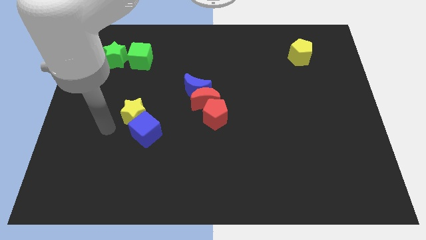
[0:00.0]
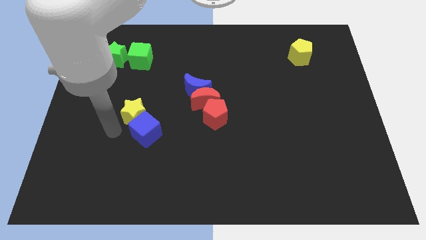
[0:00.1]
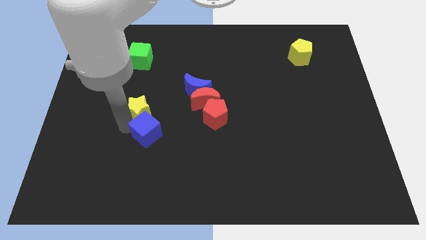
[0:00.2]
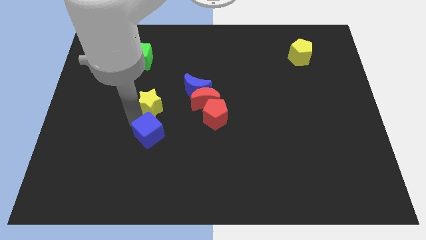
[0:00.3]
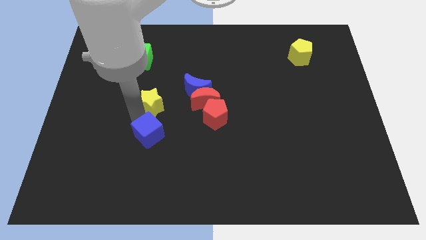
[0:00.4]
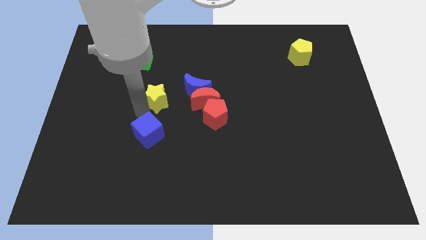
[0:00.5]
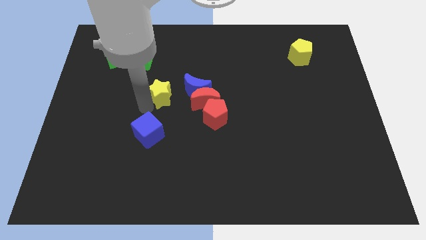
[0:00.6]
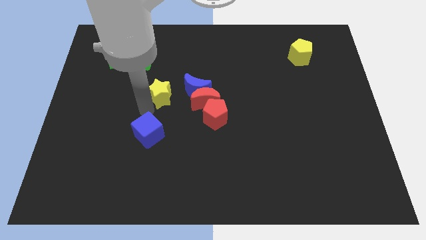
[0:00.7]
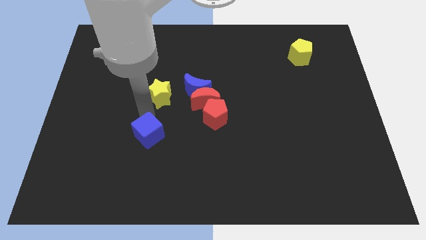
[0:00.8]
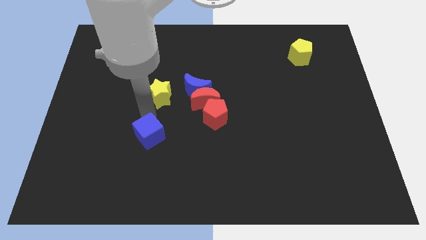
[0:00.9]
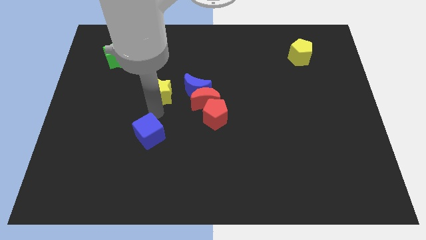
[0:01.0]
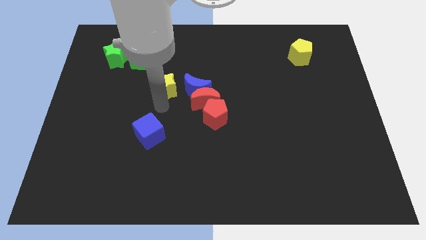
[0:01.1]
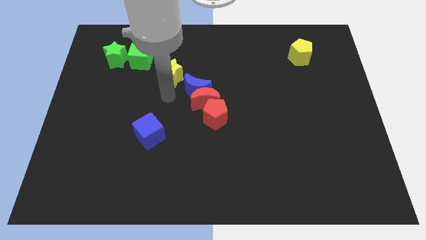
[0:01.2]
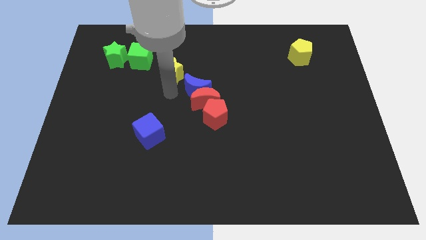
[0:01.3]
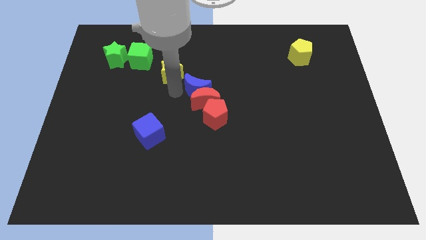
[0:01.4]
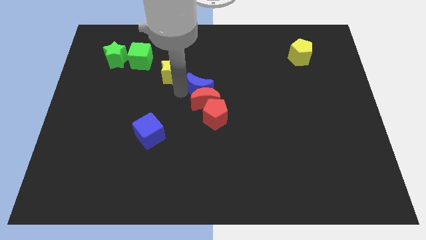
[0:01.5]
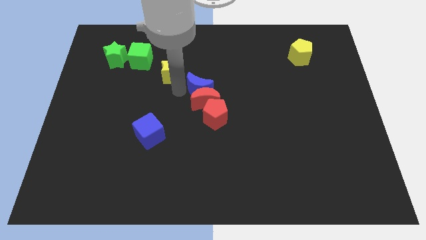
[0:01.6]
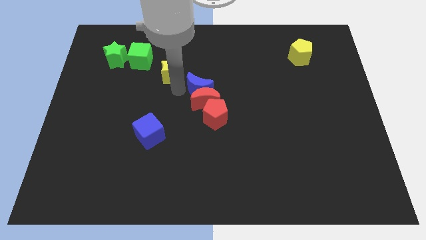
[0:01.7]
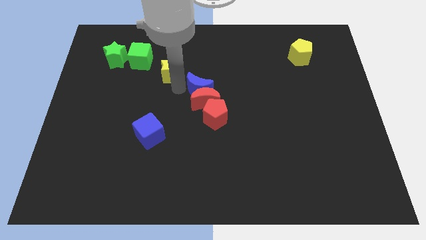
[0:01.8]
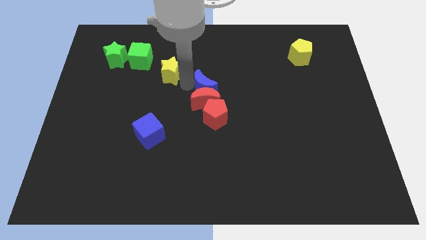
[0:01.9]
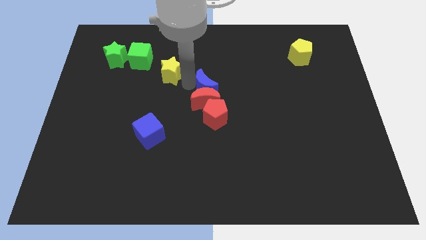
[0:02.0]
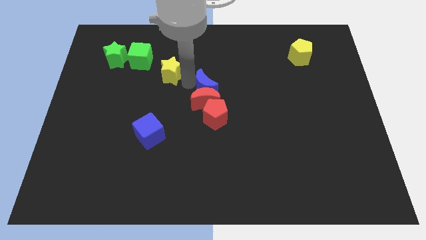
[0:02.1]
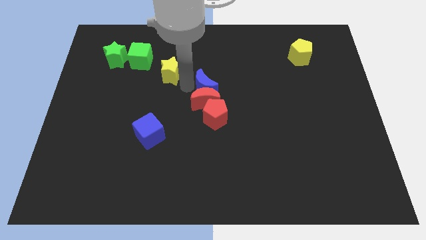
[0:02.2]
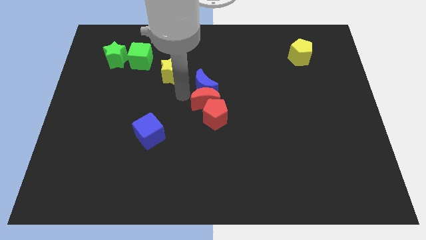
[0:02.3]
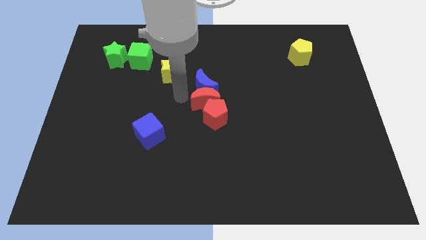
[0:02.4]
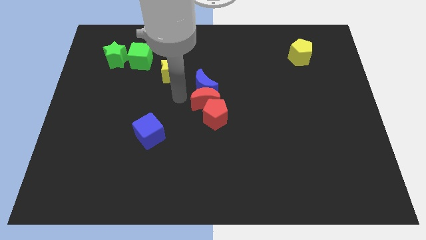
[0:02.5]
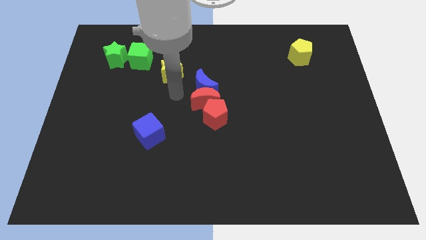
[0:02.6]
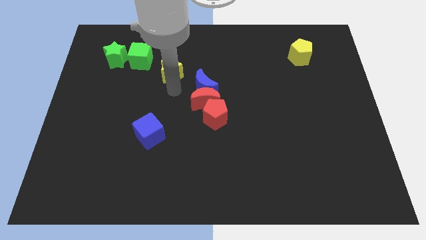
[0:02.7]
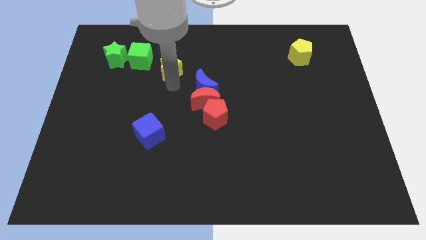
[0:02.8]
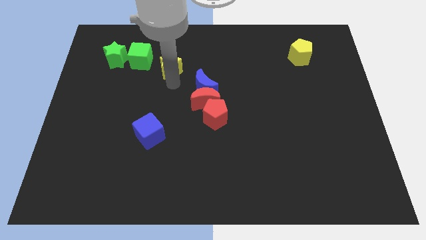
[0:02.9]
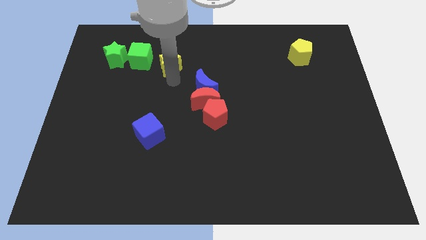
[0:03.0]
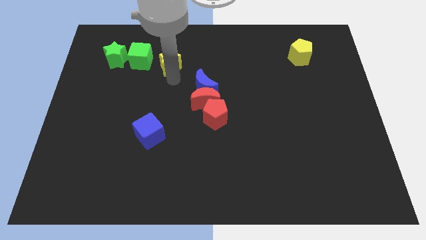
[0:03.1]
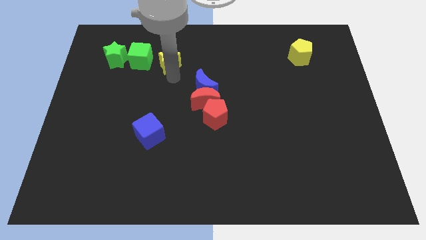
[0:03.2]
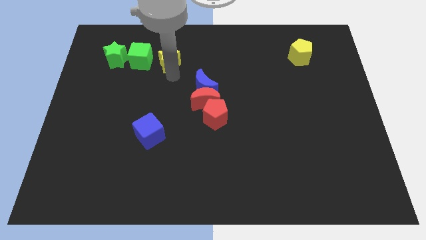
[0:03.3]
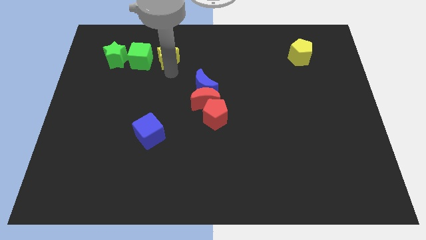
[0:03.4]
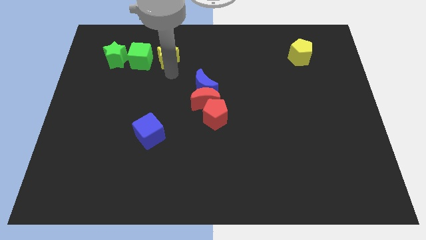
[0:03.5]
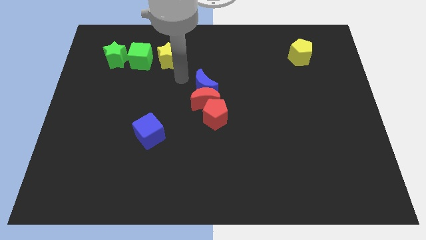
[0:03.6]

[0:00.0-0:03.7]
place the yellow star right to the green cube

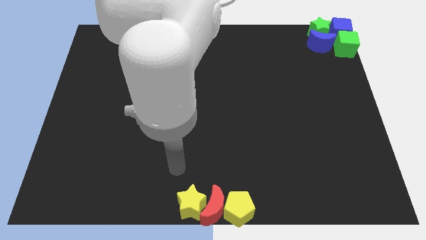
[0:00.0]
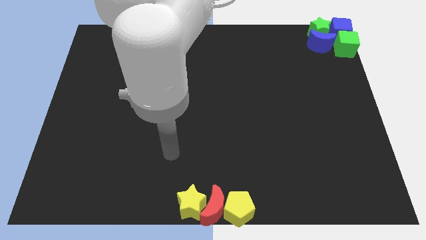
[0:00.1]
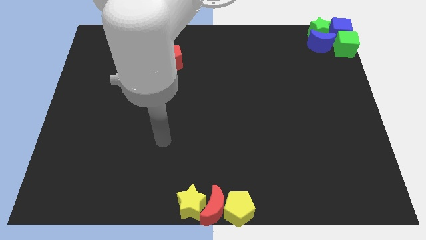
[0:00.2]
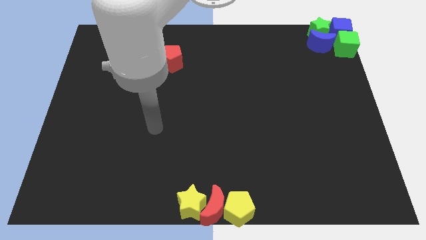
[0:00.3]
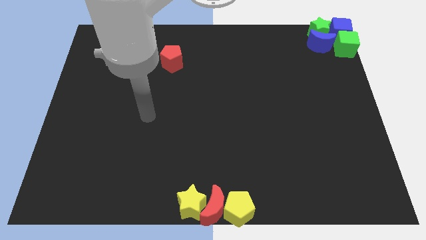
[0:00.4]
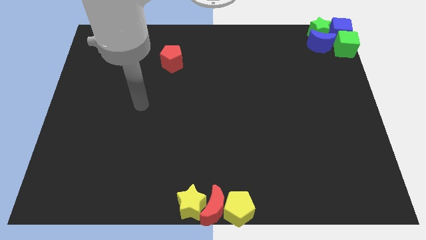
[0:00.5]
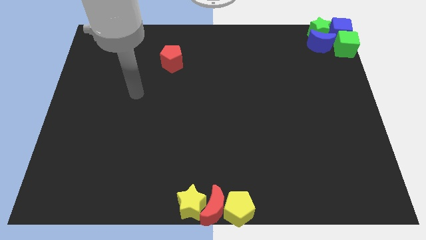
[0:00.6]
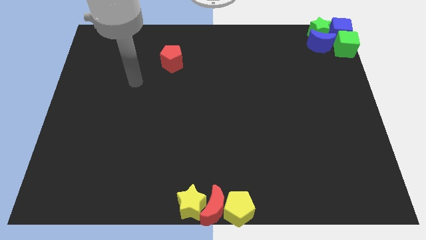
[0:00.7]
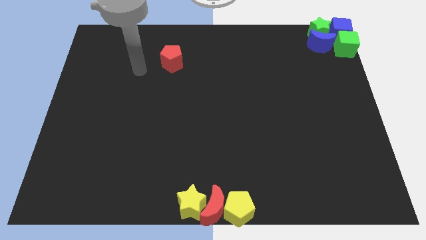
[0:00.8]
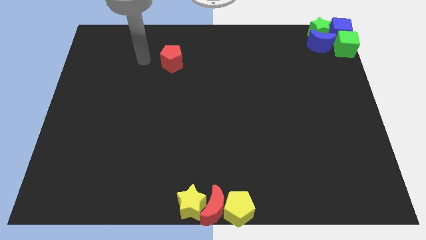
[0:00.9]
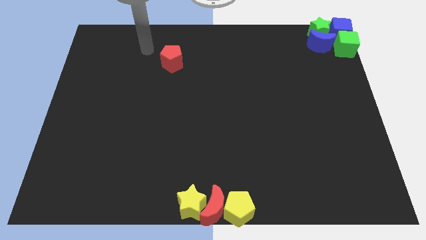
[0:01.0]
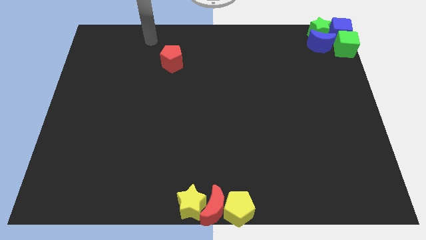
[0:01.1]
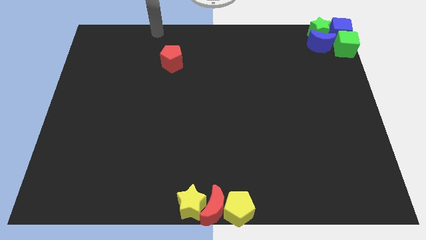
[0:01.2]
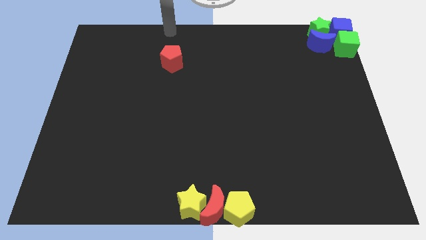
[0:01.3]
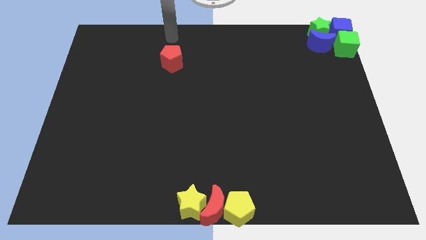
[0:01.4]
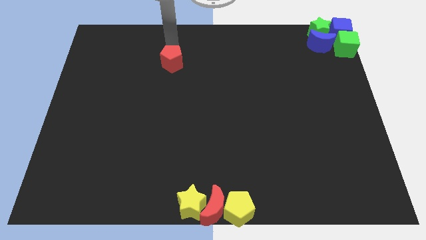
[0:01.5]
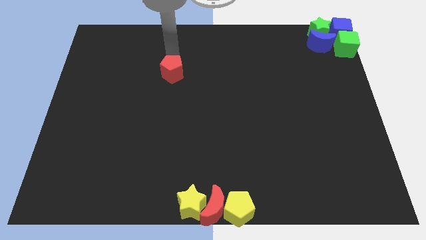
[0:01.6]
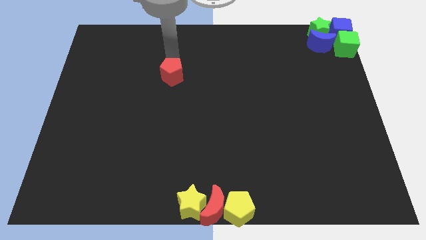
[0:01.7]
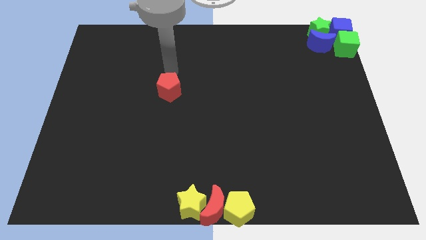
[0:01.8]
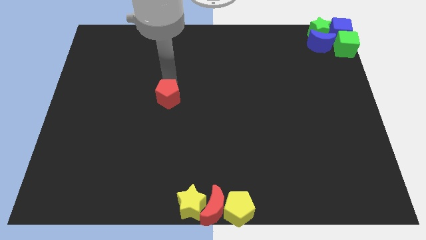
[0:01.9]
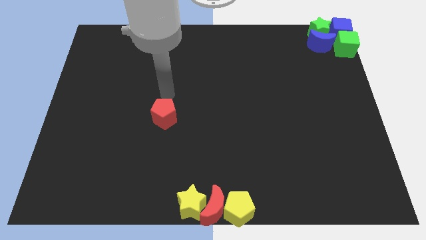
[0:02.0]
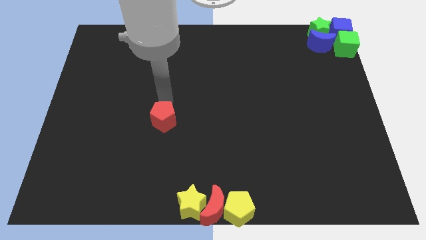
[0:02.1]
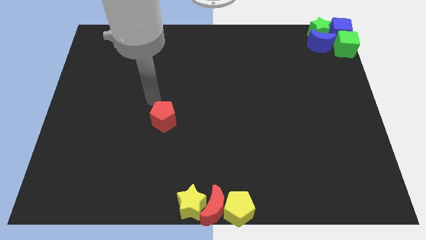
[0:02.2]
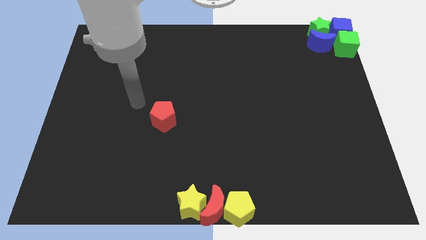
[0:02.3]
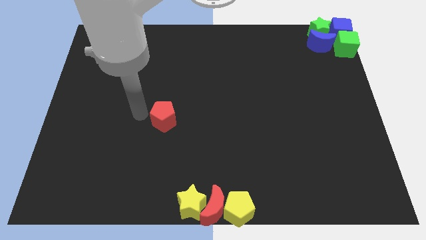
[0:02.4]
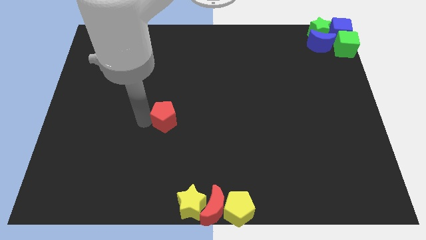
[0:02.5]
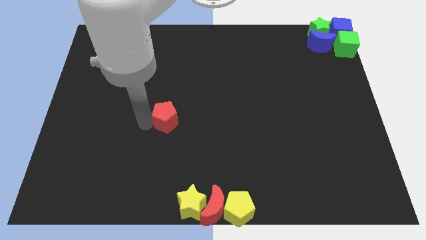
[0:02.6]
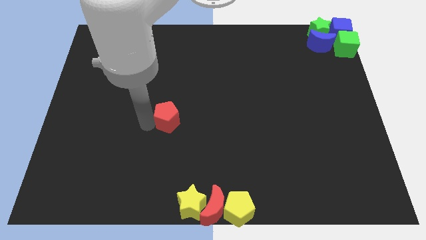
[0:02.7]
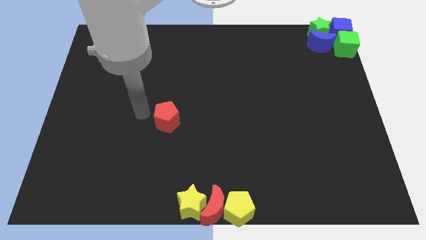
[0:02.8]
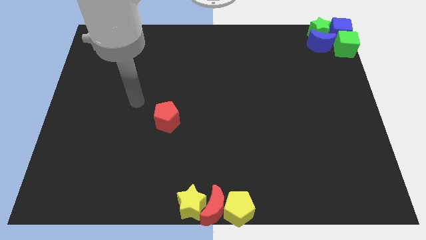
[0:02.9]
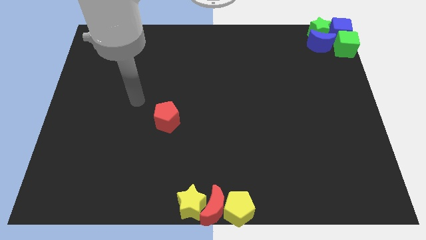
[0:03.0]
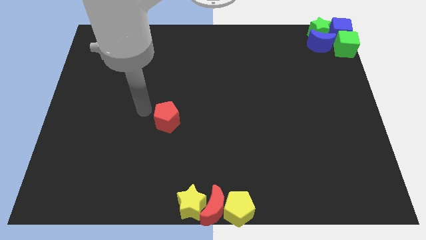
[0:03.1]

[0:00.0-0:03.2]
move your arm to the top of the board

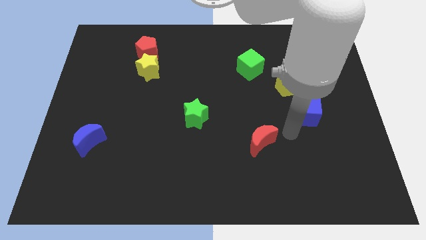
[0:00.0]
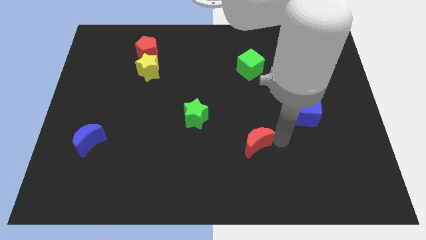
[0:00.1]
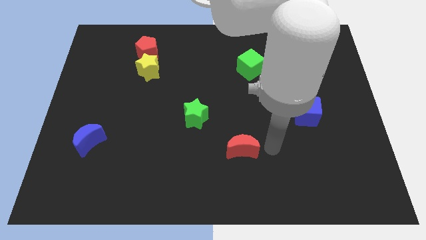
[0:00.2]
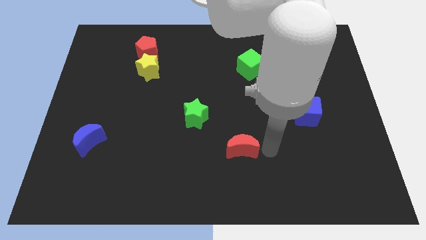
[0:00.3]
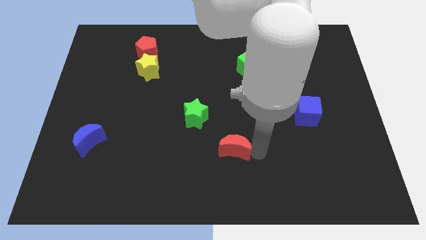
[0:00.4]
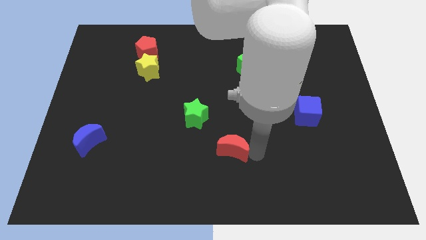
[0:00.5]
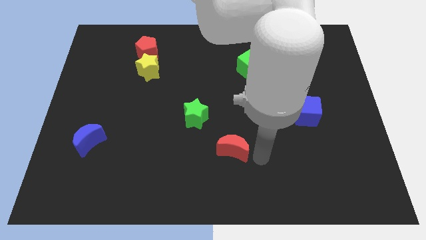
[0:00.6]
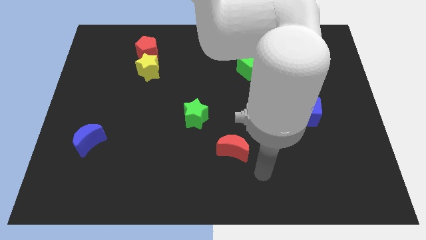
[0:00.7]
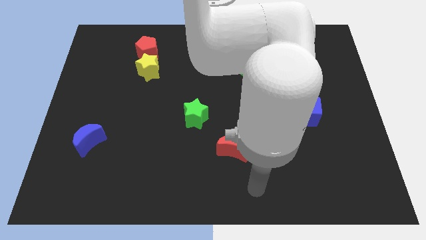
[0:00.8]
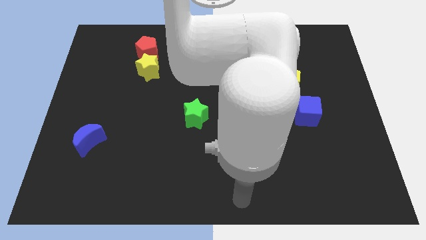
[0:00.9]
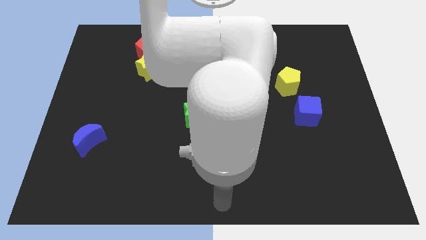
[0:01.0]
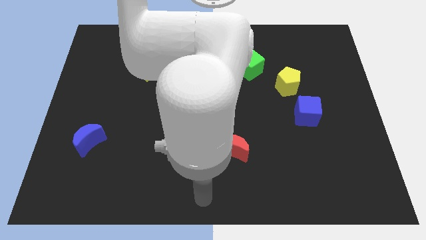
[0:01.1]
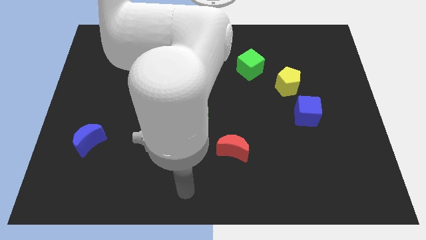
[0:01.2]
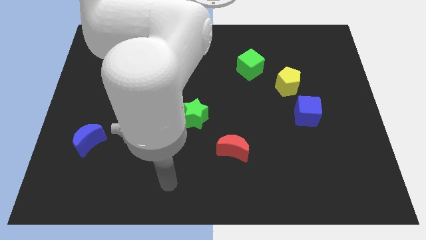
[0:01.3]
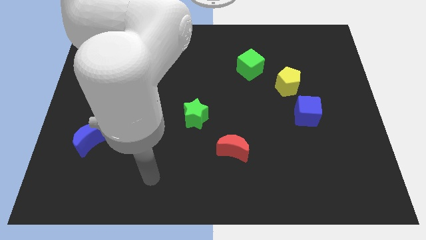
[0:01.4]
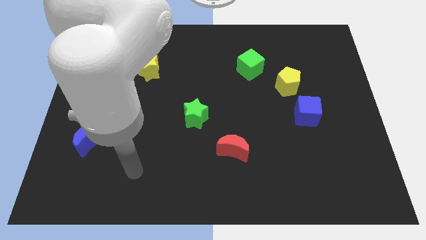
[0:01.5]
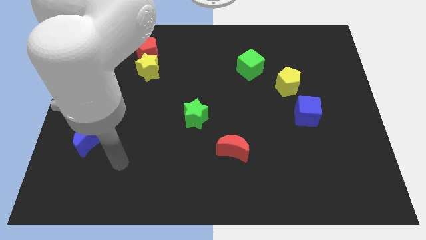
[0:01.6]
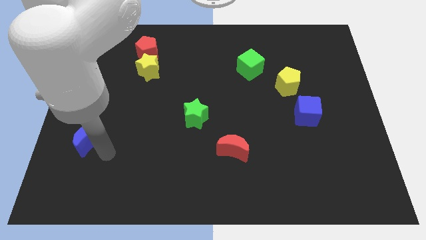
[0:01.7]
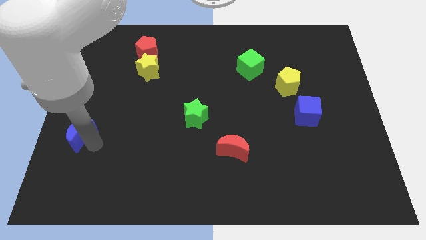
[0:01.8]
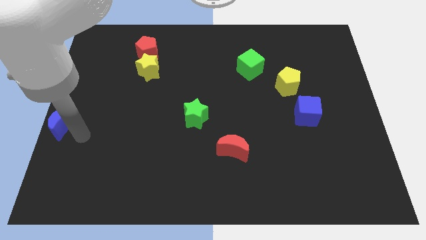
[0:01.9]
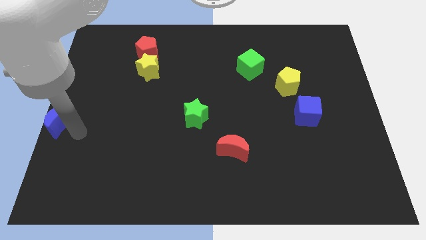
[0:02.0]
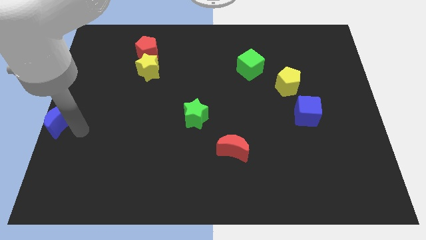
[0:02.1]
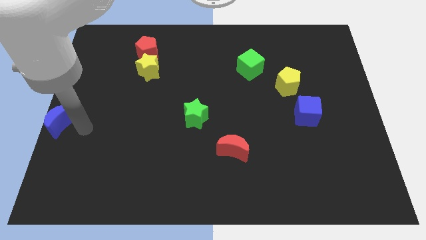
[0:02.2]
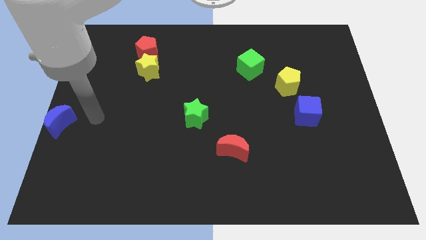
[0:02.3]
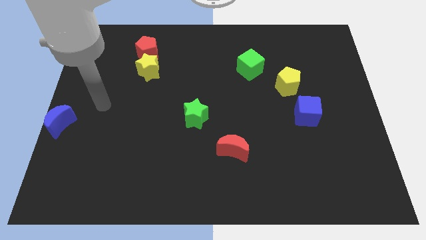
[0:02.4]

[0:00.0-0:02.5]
push the red and blue crescents slightly to the left
